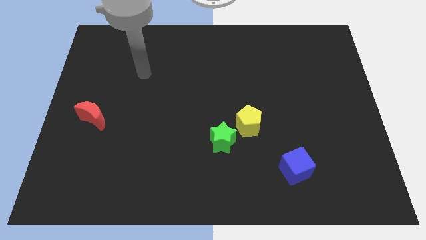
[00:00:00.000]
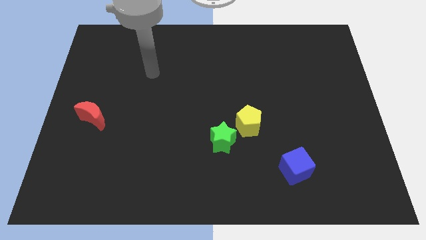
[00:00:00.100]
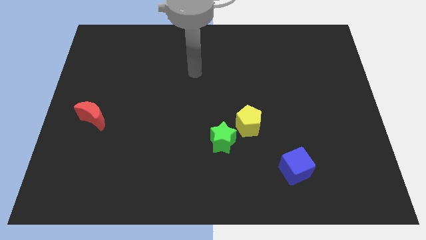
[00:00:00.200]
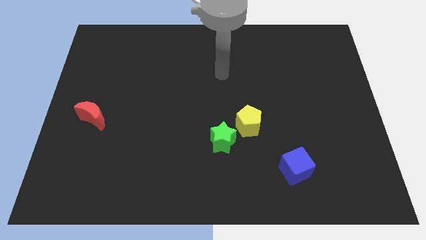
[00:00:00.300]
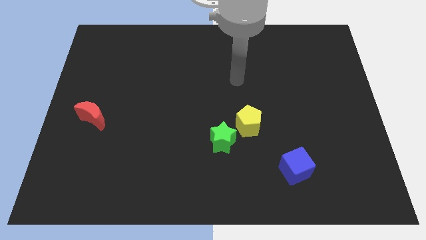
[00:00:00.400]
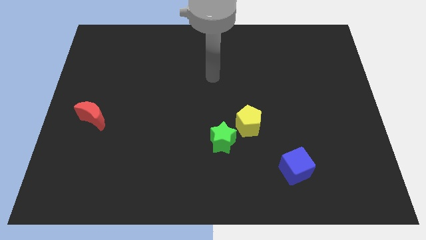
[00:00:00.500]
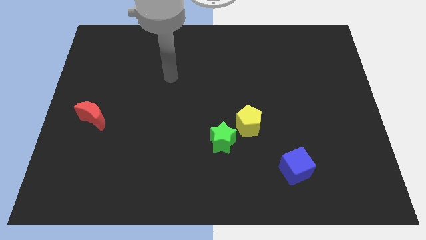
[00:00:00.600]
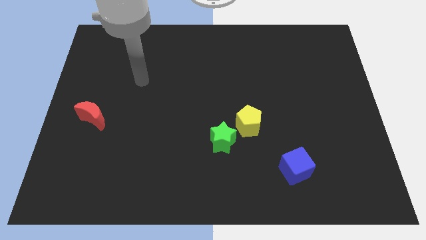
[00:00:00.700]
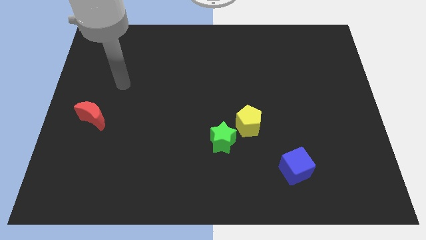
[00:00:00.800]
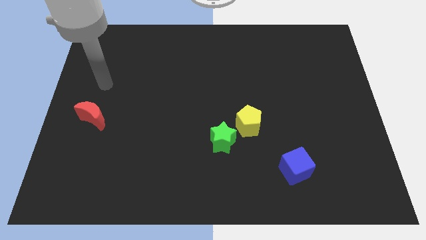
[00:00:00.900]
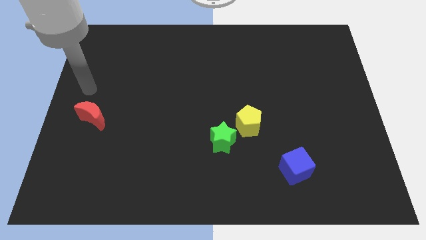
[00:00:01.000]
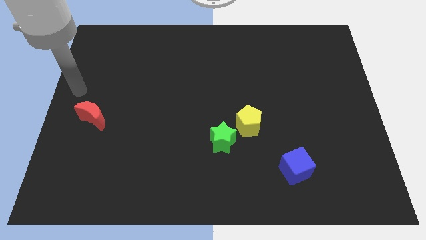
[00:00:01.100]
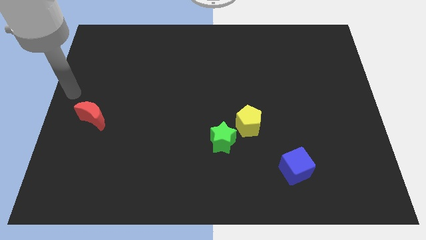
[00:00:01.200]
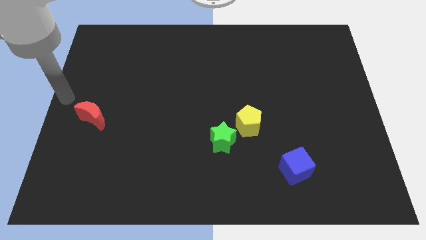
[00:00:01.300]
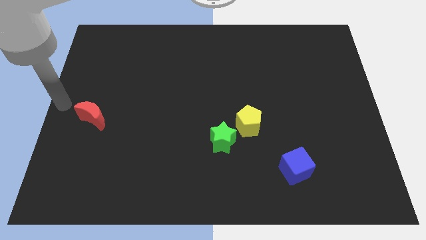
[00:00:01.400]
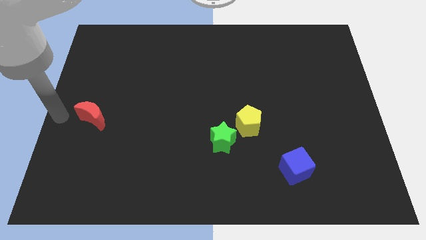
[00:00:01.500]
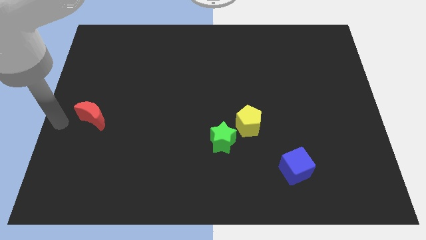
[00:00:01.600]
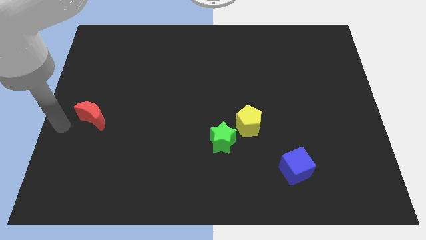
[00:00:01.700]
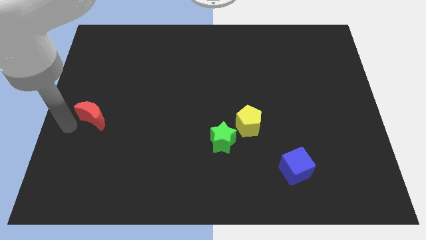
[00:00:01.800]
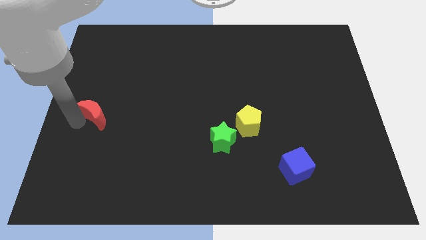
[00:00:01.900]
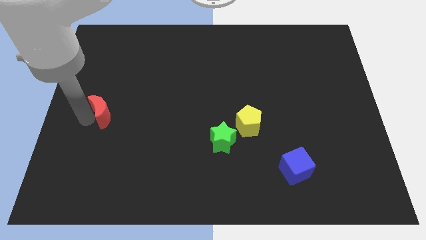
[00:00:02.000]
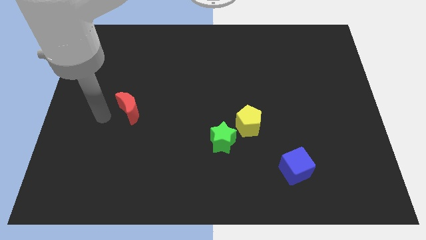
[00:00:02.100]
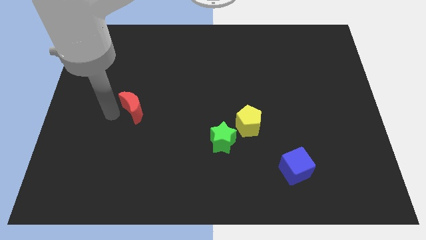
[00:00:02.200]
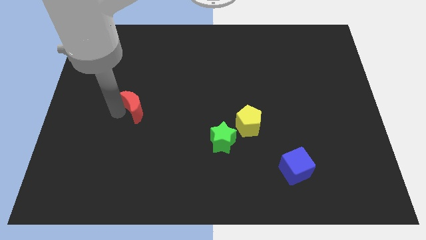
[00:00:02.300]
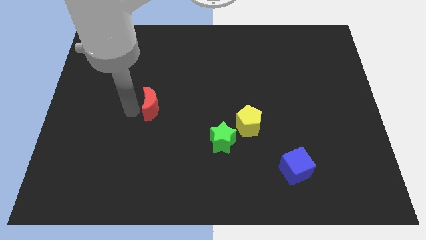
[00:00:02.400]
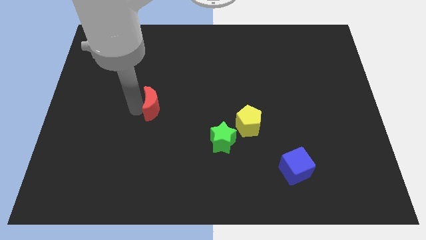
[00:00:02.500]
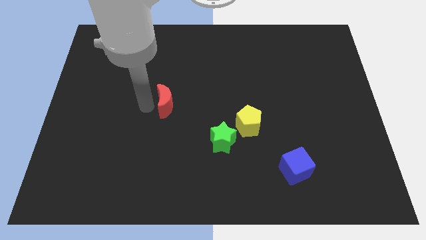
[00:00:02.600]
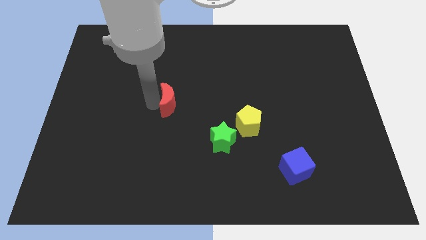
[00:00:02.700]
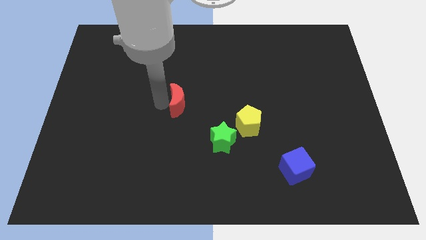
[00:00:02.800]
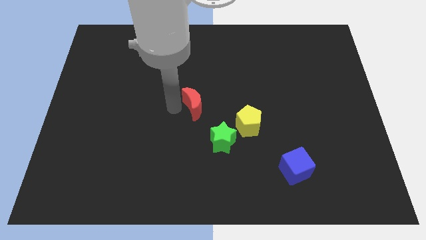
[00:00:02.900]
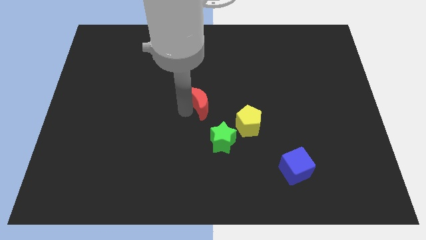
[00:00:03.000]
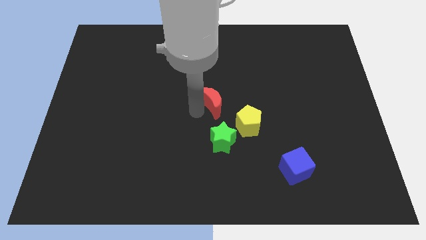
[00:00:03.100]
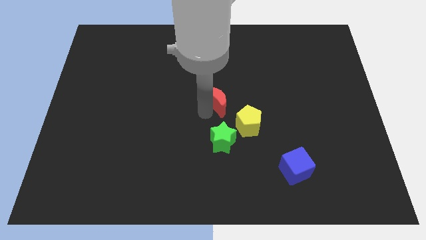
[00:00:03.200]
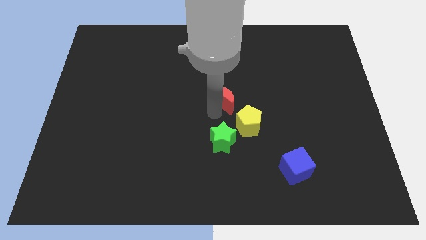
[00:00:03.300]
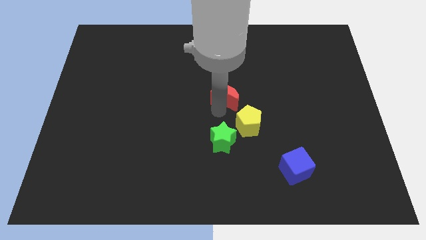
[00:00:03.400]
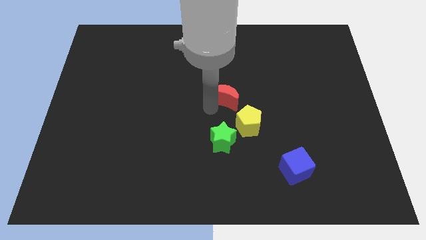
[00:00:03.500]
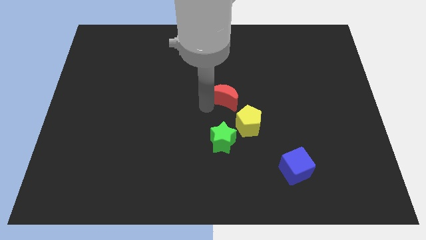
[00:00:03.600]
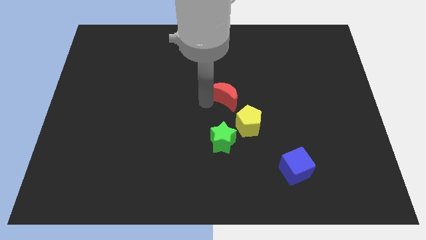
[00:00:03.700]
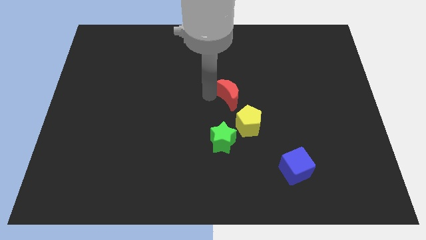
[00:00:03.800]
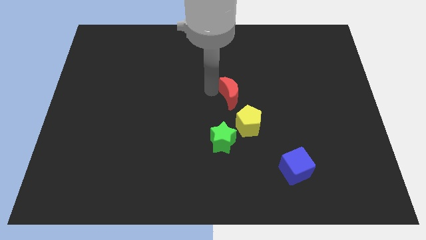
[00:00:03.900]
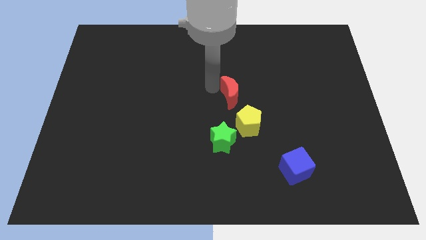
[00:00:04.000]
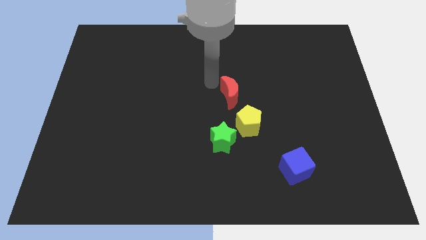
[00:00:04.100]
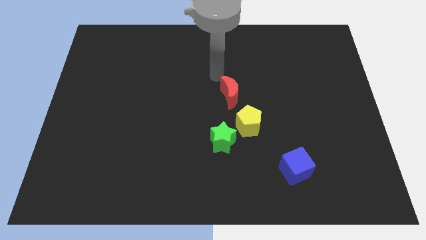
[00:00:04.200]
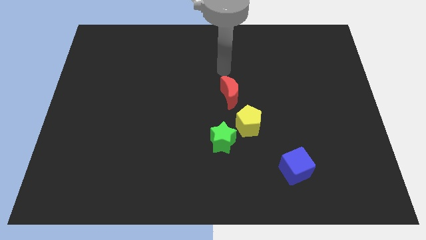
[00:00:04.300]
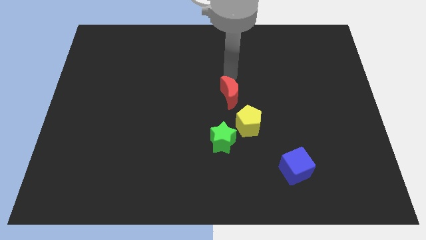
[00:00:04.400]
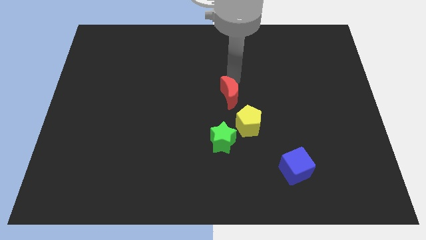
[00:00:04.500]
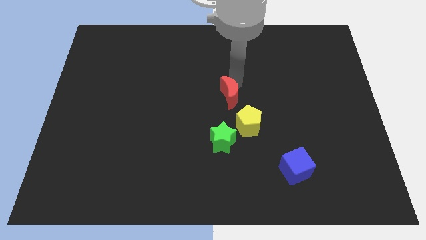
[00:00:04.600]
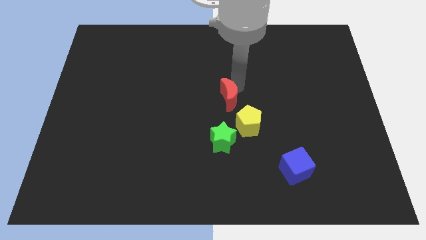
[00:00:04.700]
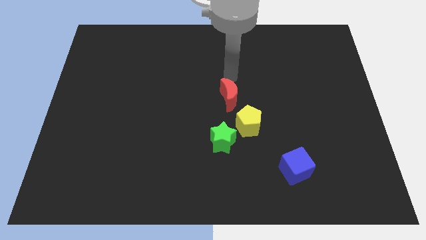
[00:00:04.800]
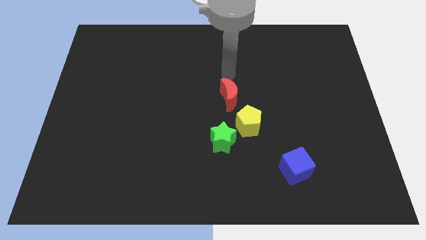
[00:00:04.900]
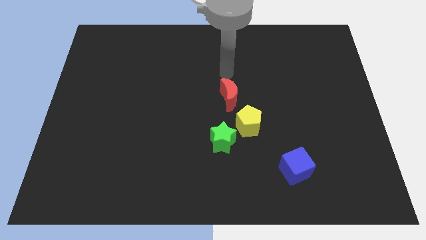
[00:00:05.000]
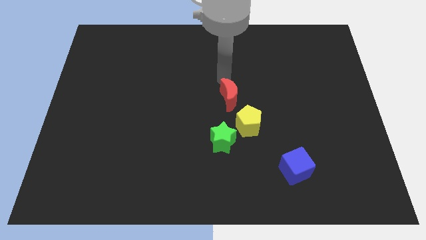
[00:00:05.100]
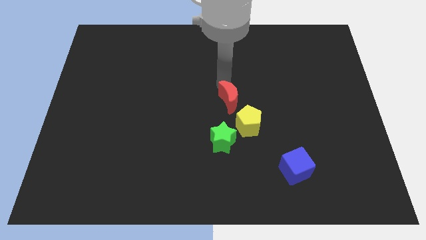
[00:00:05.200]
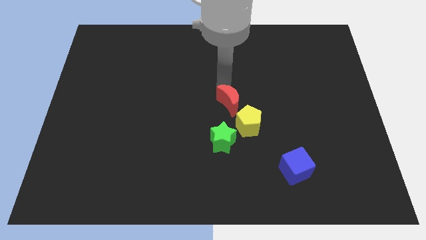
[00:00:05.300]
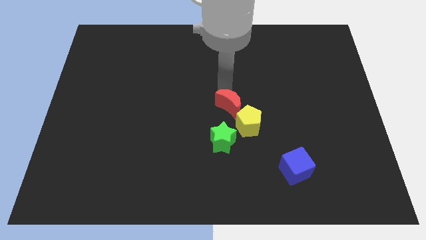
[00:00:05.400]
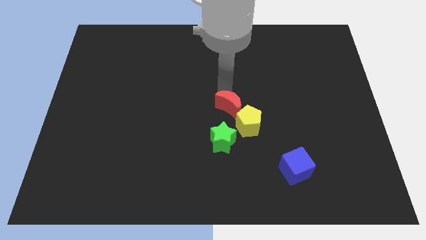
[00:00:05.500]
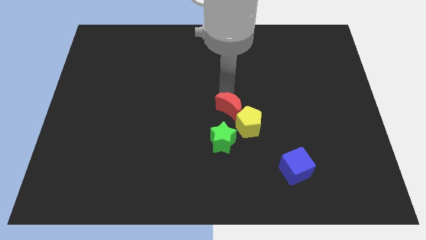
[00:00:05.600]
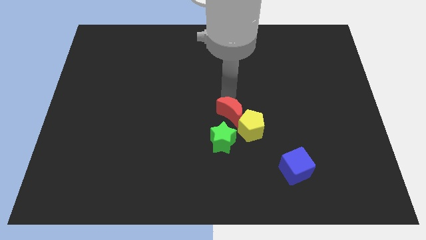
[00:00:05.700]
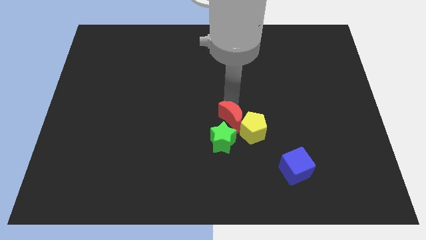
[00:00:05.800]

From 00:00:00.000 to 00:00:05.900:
slide the red moon towards the pentagon

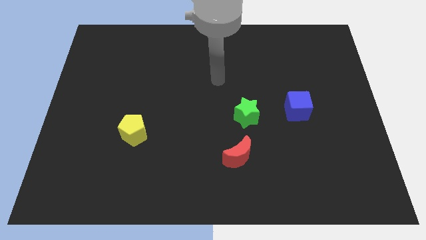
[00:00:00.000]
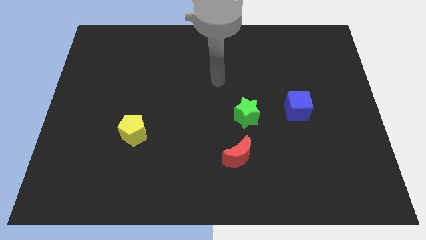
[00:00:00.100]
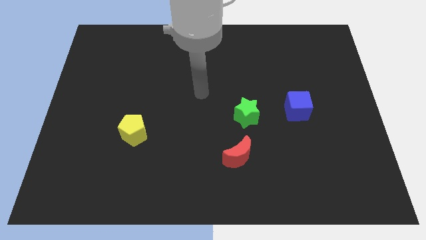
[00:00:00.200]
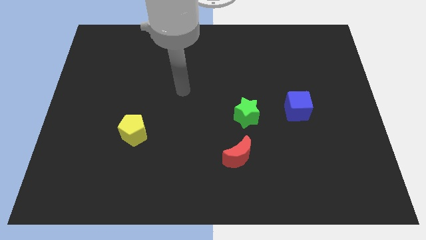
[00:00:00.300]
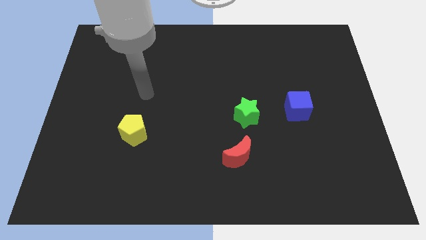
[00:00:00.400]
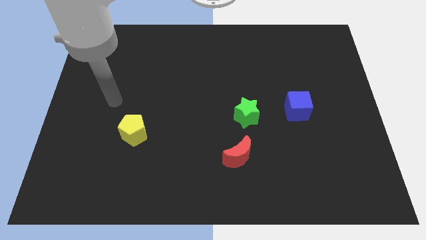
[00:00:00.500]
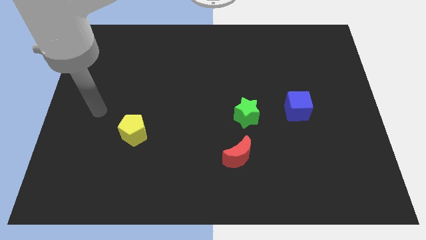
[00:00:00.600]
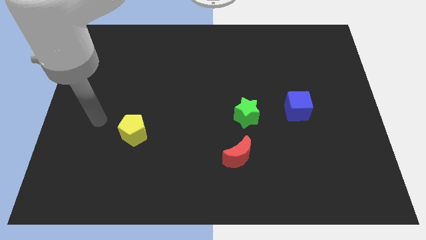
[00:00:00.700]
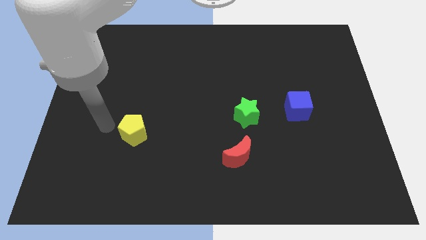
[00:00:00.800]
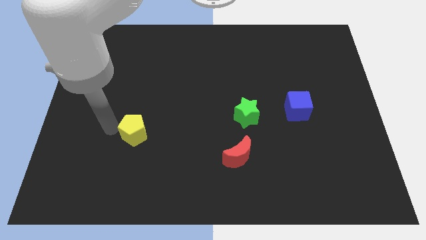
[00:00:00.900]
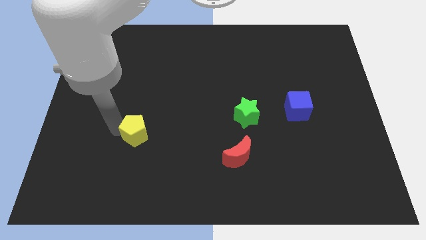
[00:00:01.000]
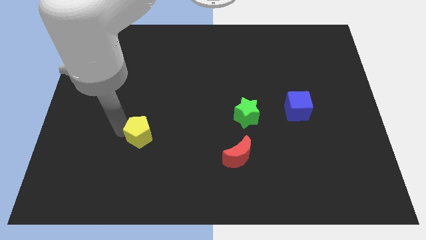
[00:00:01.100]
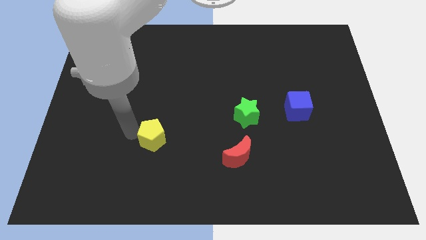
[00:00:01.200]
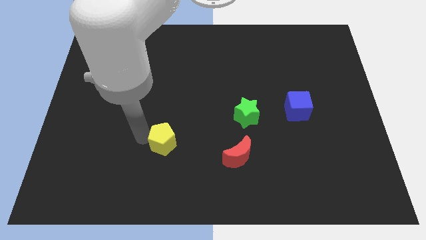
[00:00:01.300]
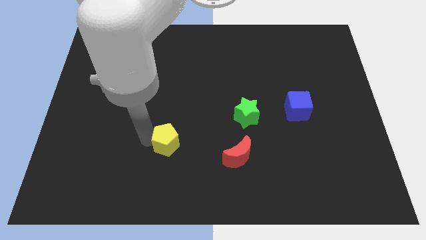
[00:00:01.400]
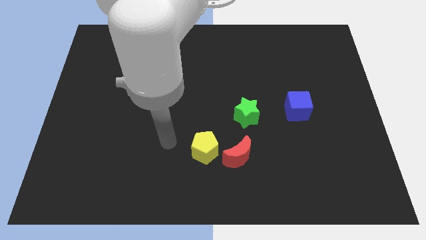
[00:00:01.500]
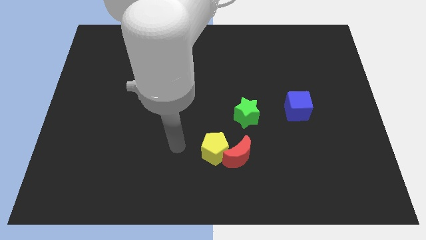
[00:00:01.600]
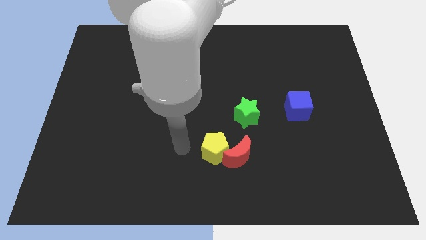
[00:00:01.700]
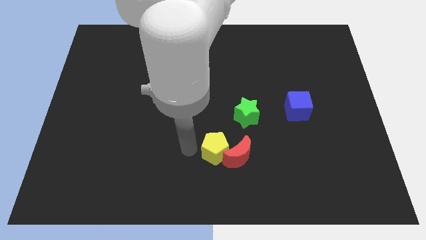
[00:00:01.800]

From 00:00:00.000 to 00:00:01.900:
move the yellow block close to the red block

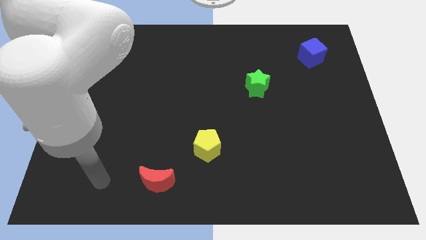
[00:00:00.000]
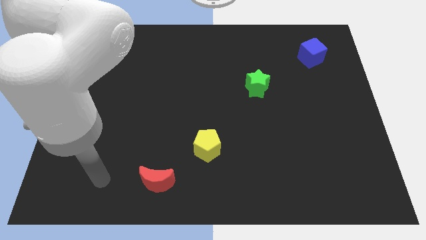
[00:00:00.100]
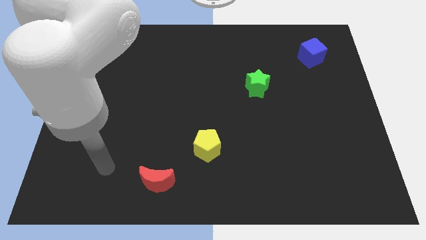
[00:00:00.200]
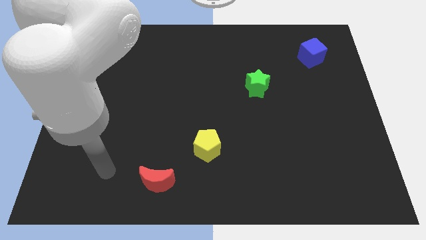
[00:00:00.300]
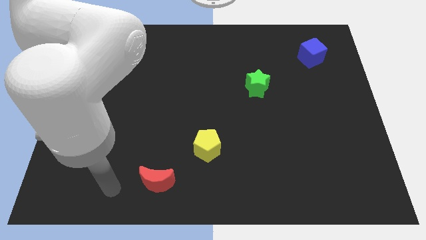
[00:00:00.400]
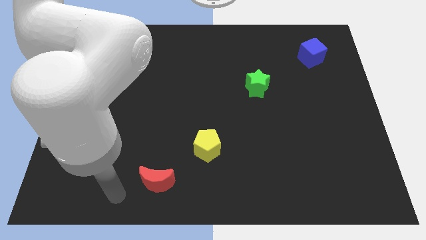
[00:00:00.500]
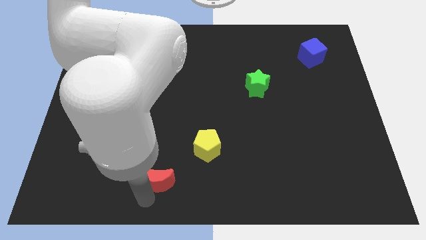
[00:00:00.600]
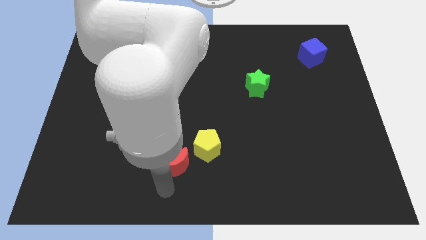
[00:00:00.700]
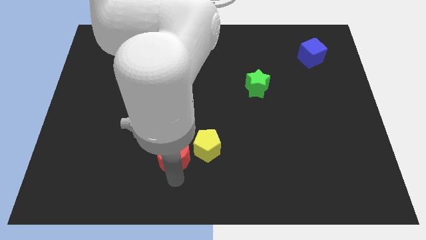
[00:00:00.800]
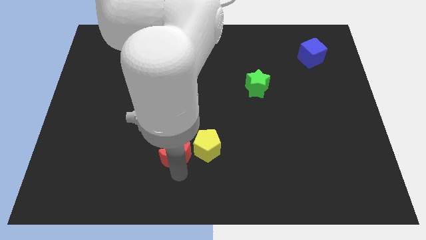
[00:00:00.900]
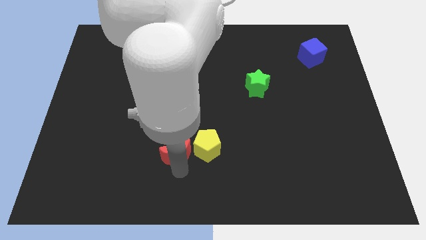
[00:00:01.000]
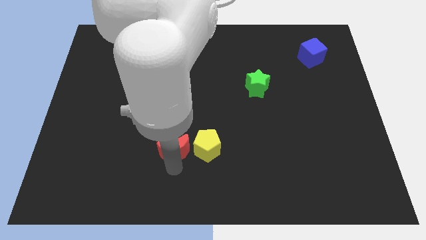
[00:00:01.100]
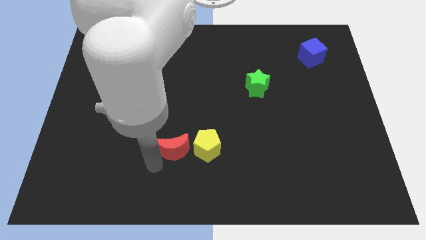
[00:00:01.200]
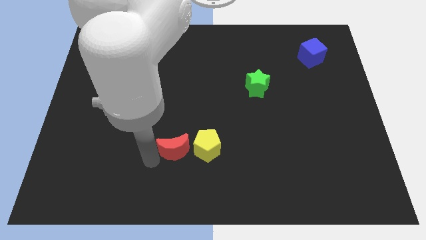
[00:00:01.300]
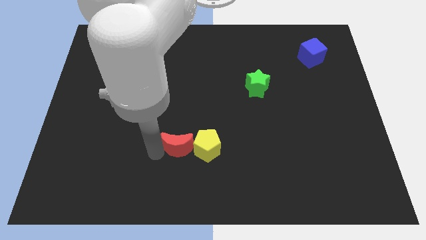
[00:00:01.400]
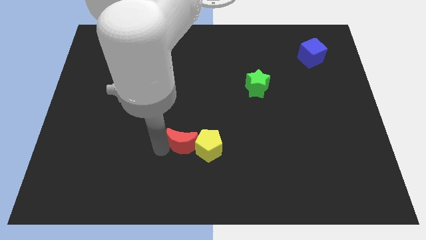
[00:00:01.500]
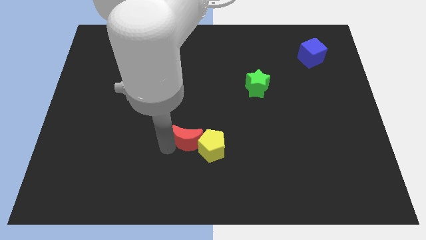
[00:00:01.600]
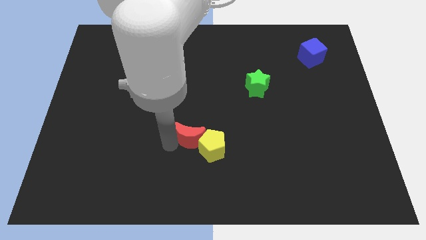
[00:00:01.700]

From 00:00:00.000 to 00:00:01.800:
push the red moon close to the pentagon
